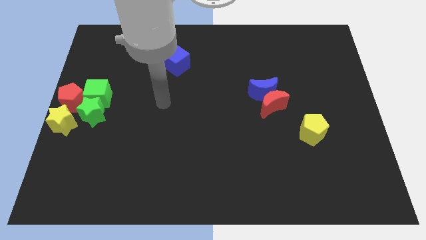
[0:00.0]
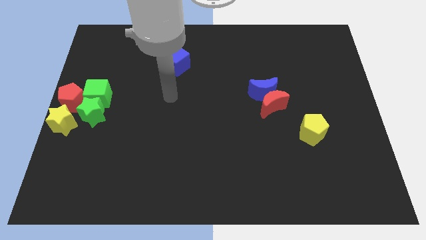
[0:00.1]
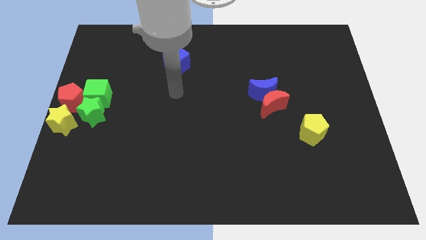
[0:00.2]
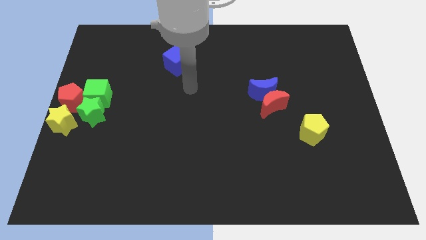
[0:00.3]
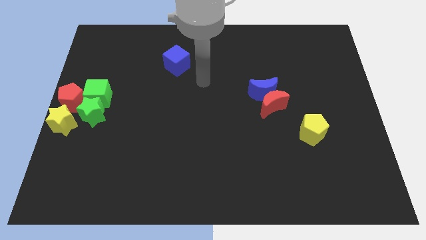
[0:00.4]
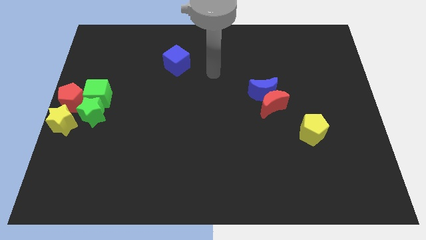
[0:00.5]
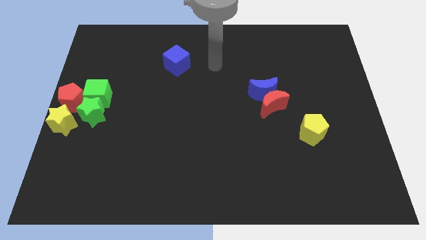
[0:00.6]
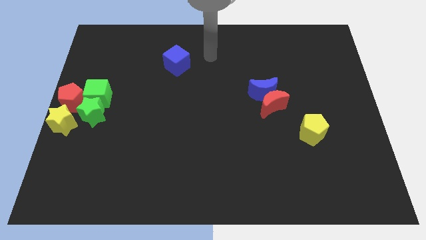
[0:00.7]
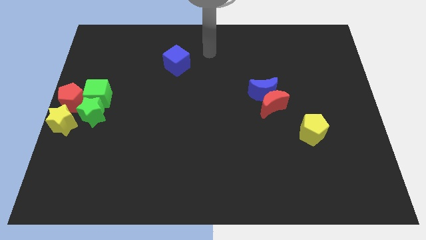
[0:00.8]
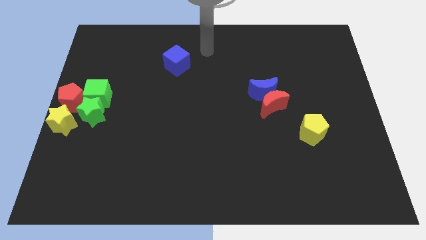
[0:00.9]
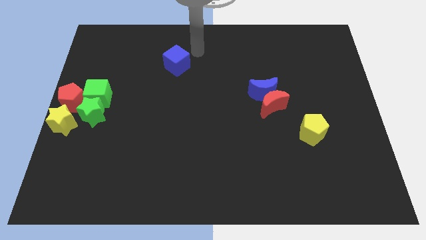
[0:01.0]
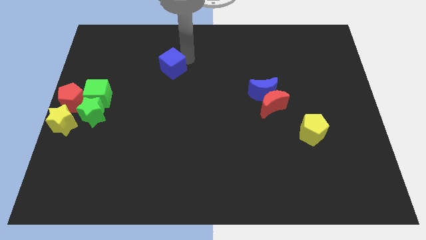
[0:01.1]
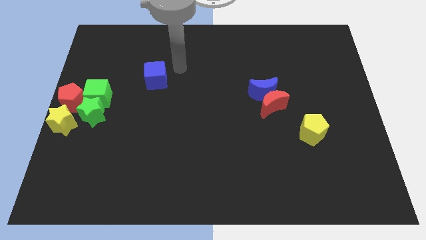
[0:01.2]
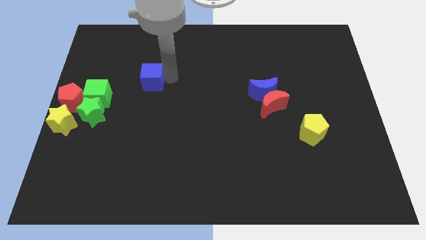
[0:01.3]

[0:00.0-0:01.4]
drag the blue cube towards the green cube

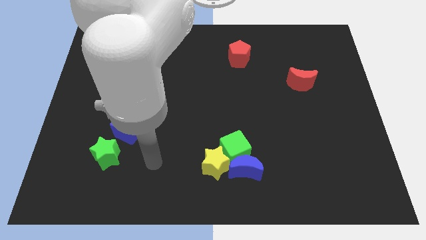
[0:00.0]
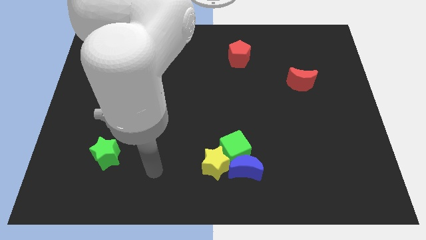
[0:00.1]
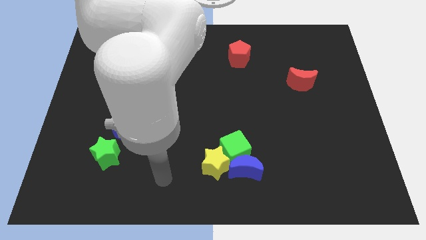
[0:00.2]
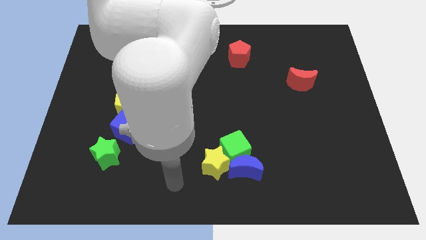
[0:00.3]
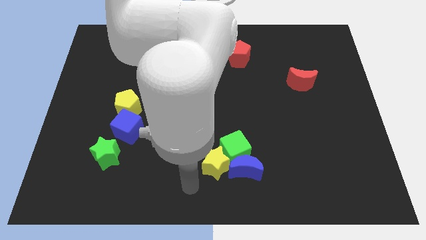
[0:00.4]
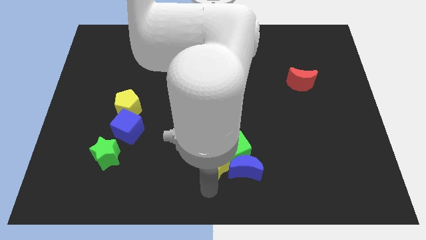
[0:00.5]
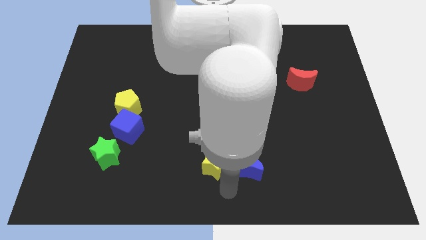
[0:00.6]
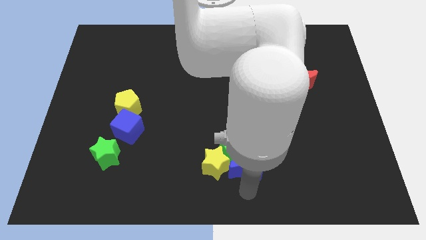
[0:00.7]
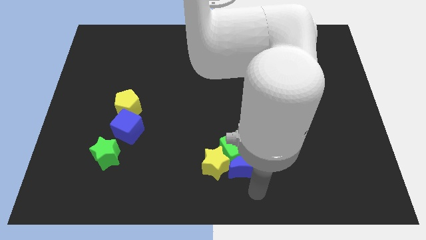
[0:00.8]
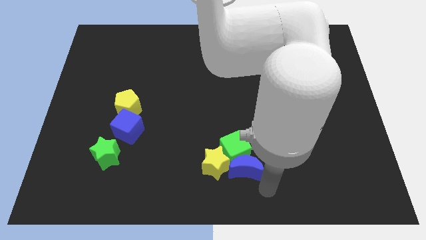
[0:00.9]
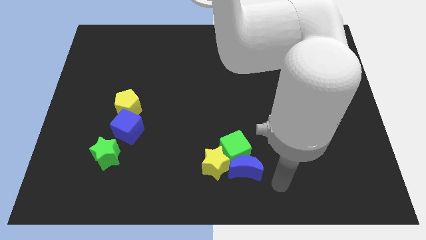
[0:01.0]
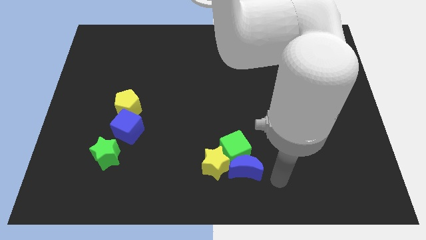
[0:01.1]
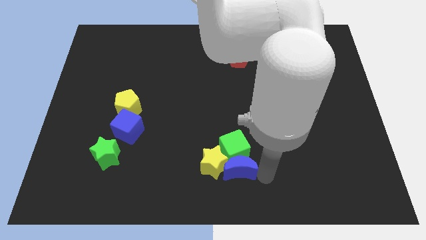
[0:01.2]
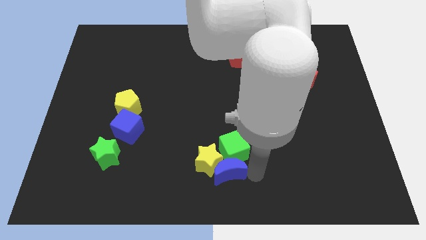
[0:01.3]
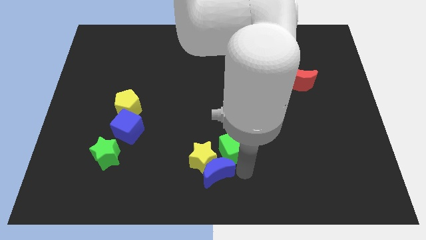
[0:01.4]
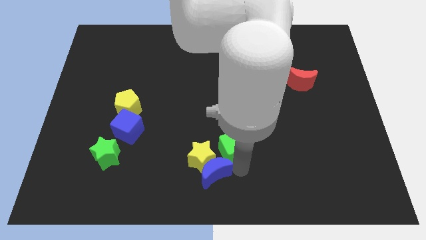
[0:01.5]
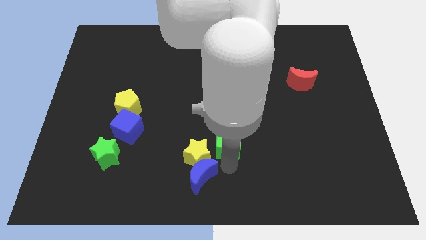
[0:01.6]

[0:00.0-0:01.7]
separate the blue moon and yellow star from the green cube

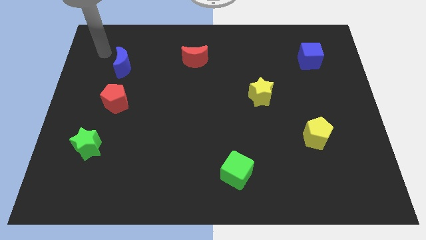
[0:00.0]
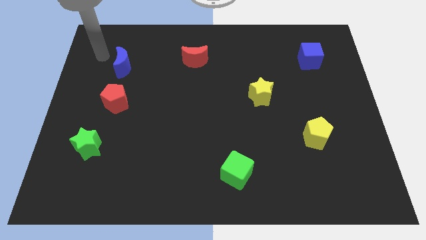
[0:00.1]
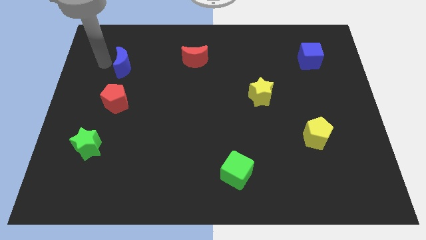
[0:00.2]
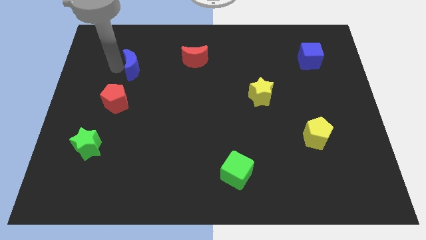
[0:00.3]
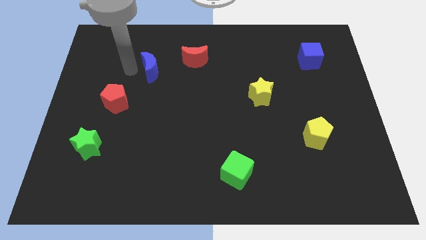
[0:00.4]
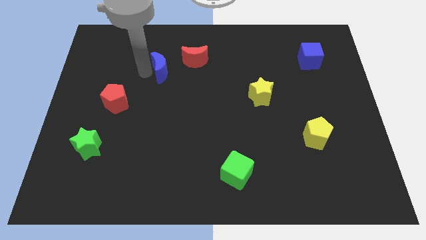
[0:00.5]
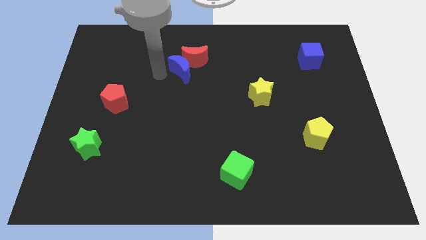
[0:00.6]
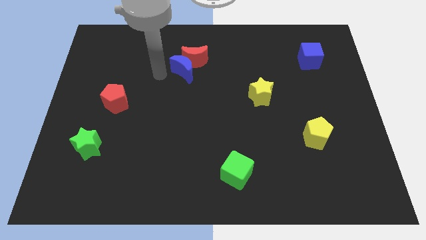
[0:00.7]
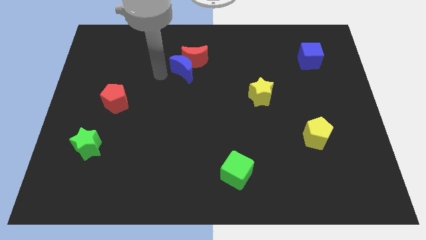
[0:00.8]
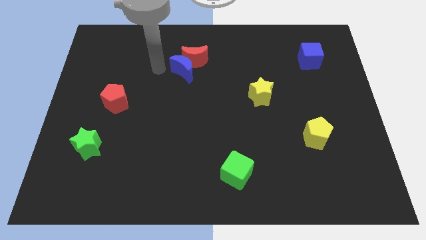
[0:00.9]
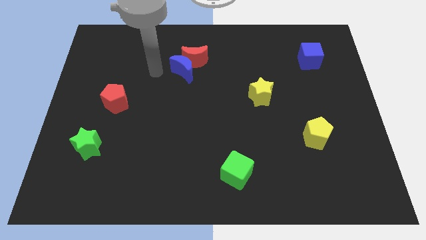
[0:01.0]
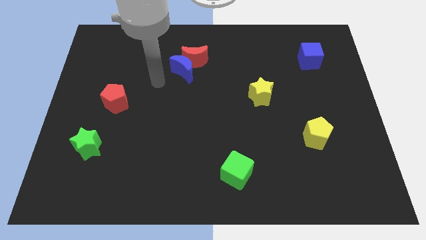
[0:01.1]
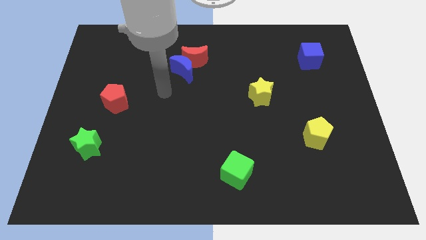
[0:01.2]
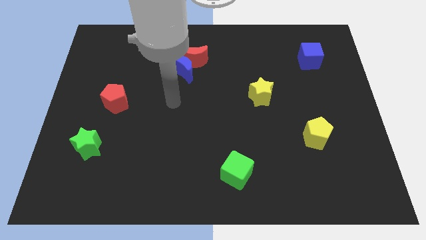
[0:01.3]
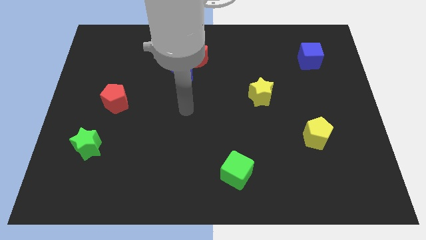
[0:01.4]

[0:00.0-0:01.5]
move the blue crescent into the red crescent

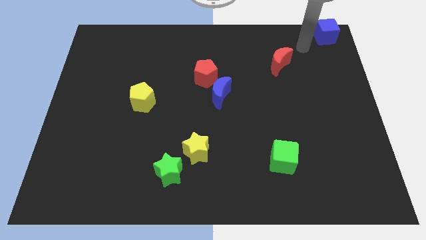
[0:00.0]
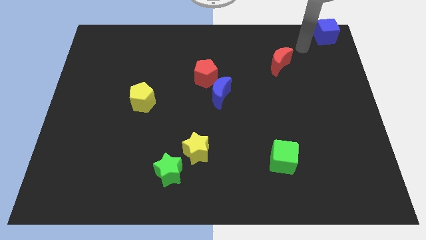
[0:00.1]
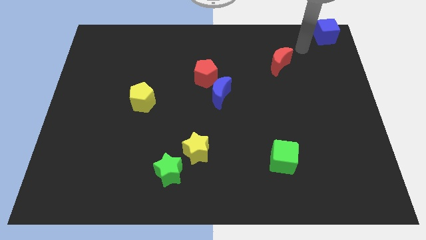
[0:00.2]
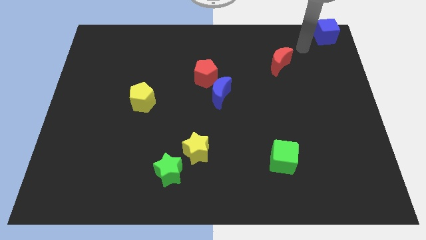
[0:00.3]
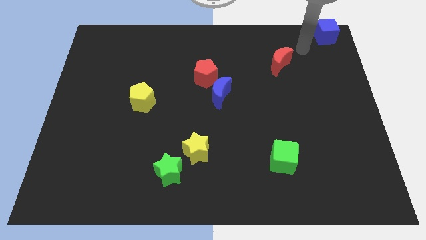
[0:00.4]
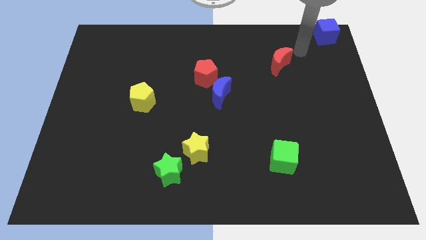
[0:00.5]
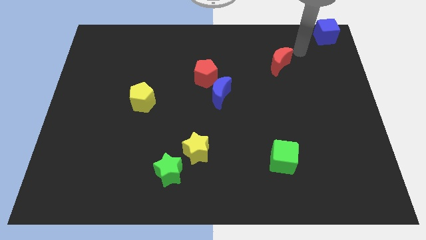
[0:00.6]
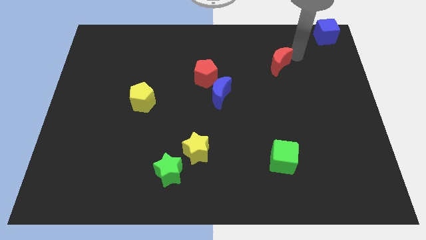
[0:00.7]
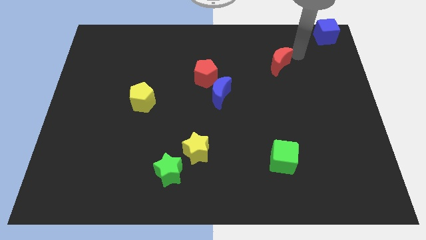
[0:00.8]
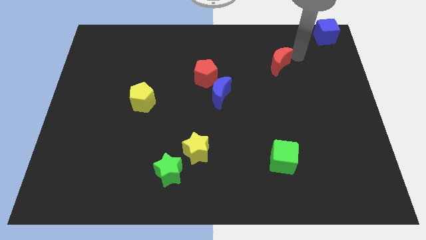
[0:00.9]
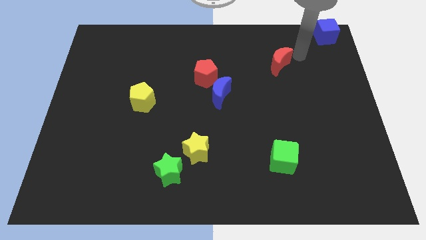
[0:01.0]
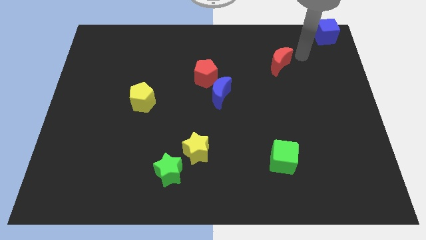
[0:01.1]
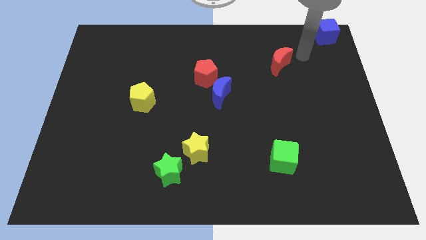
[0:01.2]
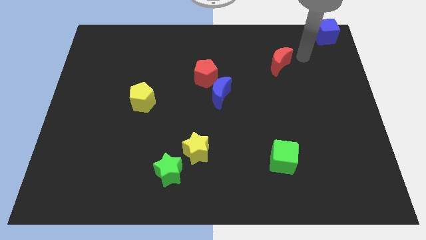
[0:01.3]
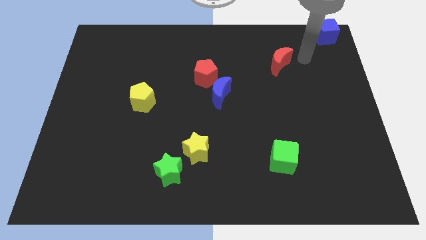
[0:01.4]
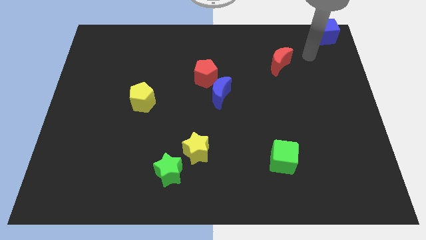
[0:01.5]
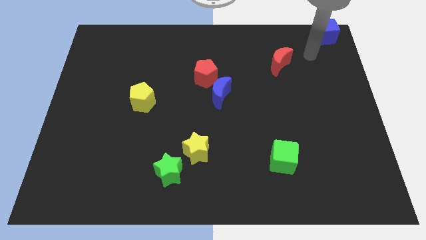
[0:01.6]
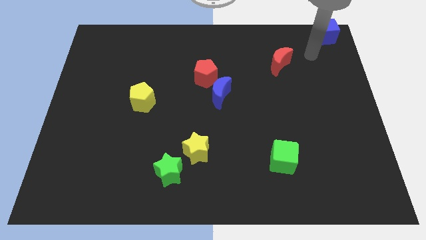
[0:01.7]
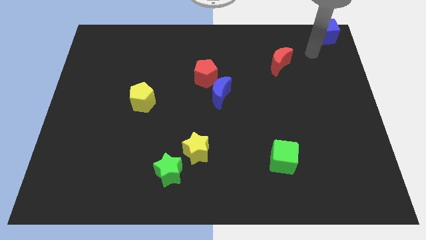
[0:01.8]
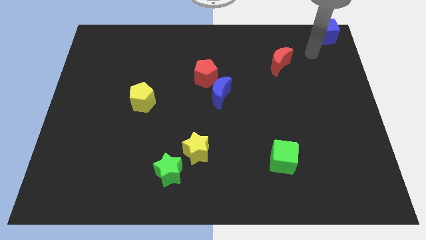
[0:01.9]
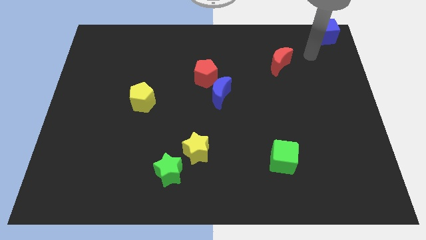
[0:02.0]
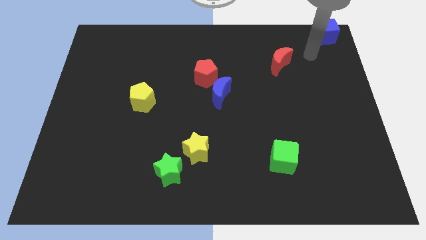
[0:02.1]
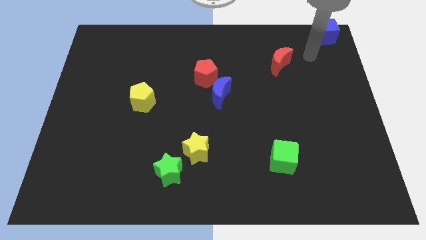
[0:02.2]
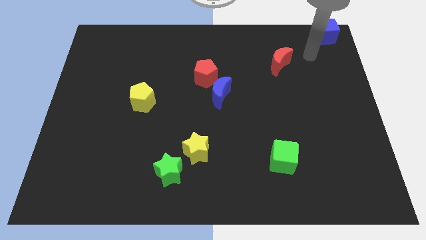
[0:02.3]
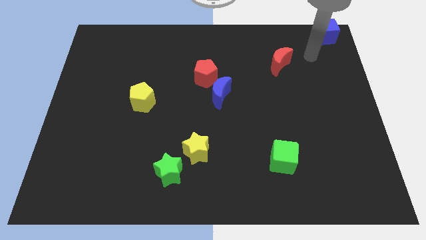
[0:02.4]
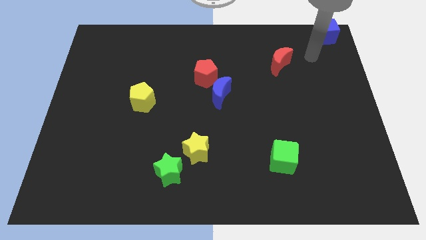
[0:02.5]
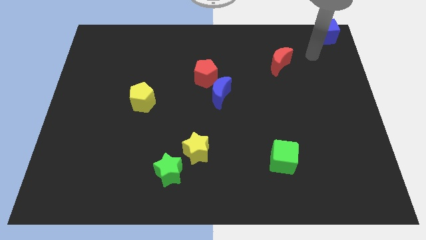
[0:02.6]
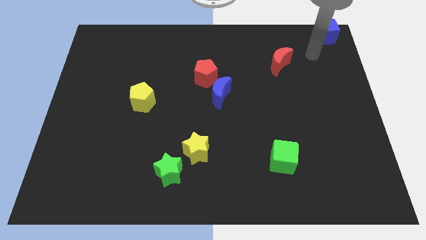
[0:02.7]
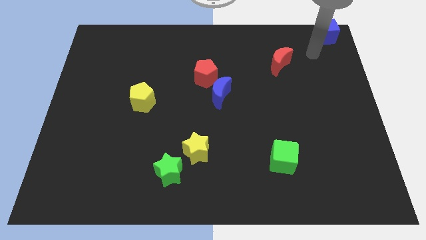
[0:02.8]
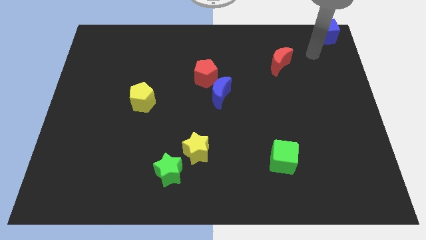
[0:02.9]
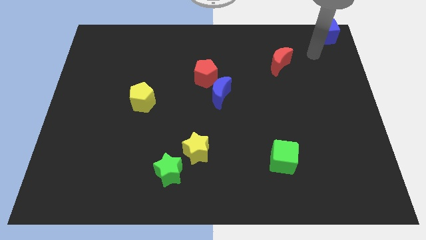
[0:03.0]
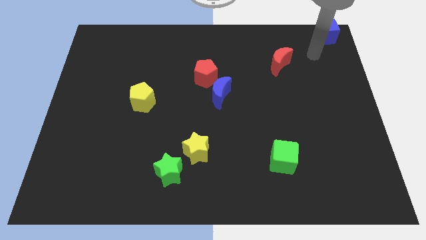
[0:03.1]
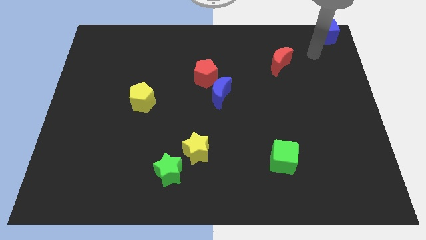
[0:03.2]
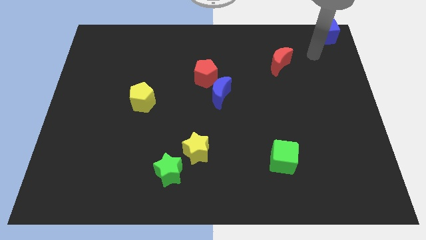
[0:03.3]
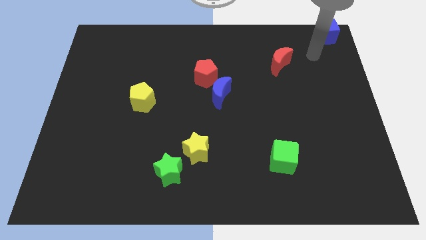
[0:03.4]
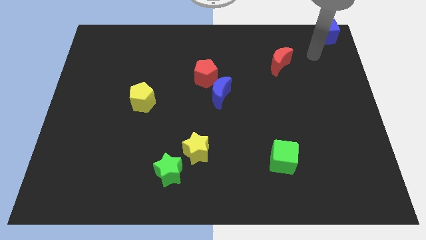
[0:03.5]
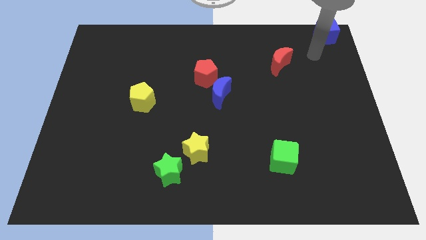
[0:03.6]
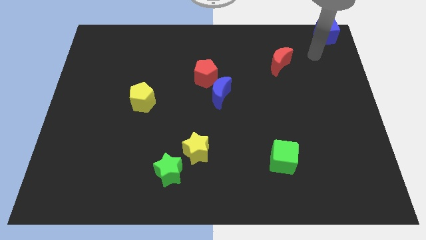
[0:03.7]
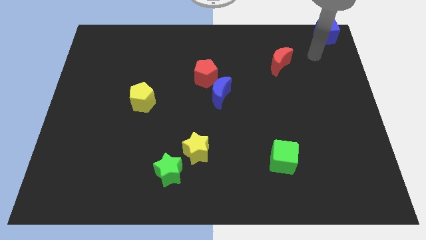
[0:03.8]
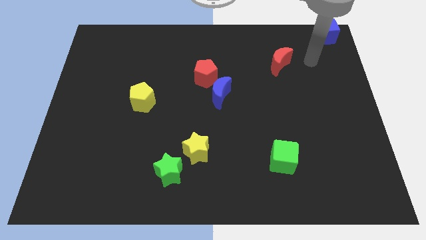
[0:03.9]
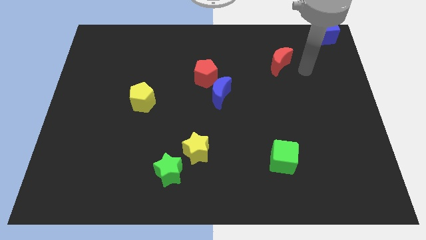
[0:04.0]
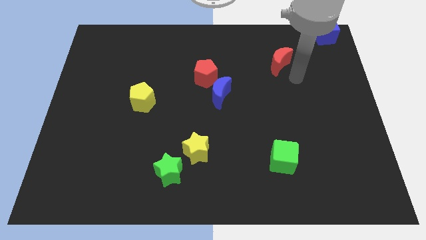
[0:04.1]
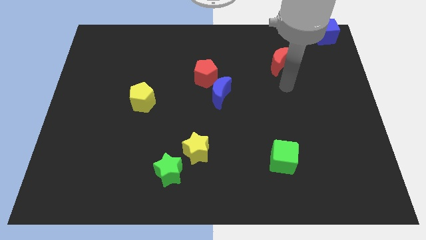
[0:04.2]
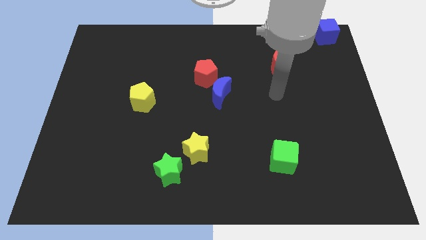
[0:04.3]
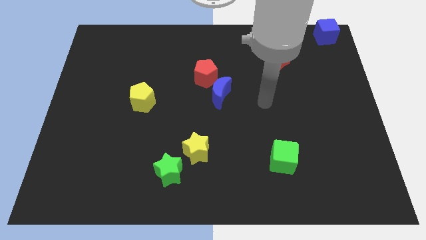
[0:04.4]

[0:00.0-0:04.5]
go and point your arm at the right side of the blue crescent
